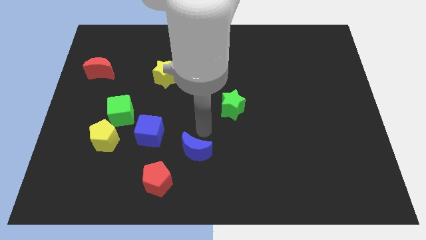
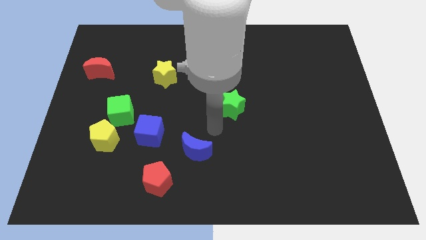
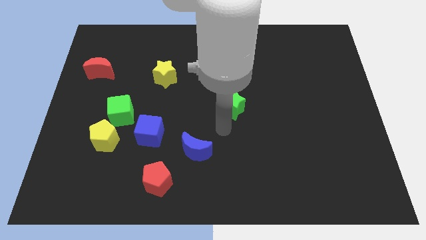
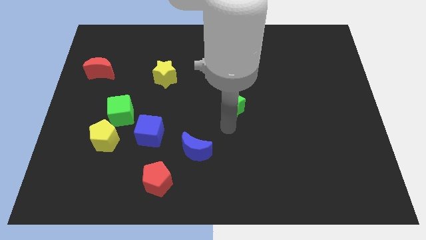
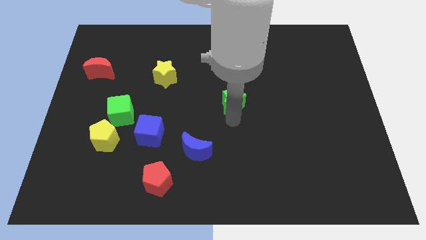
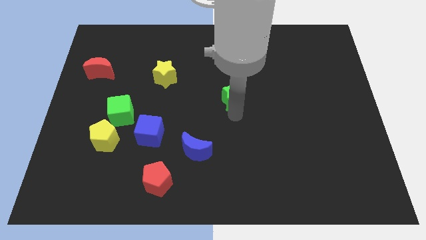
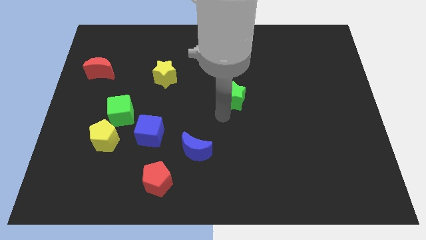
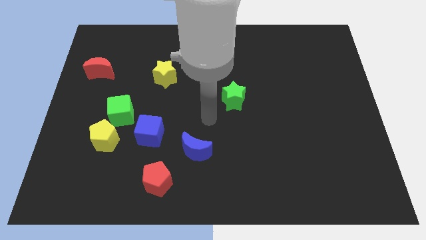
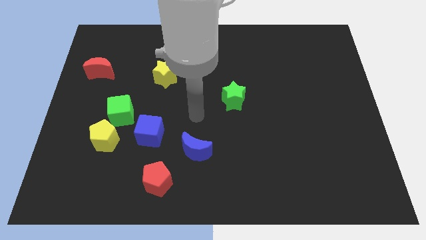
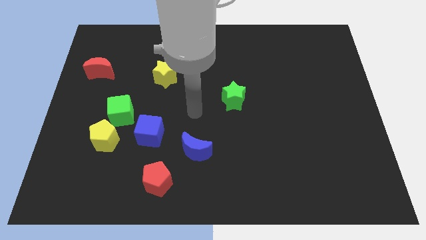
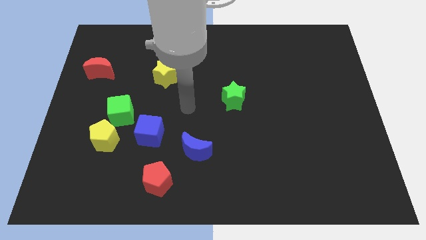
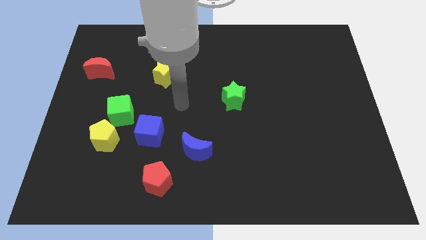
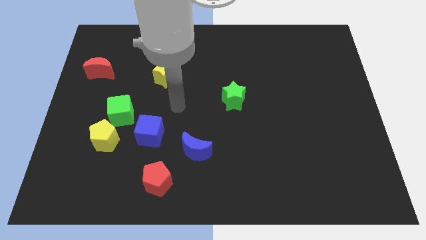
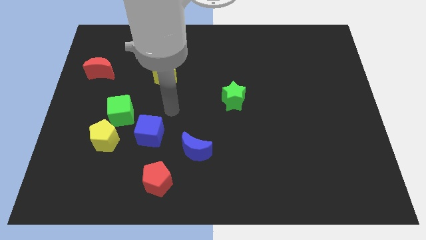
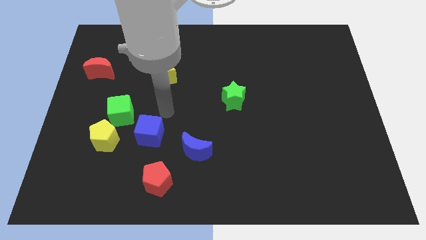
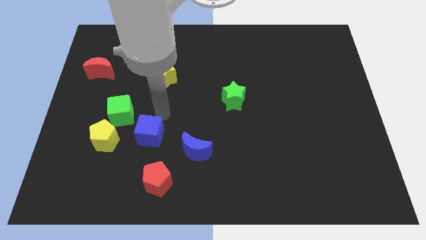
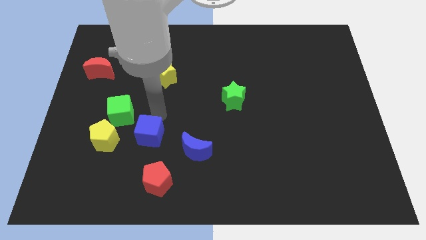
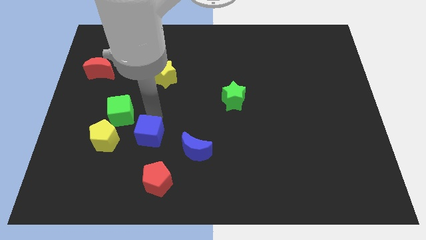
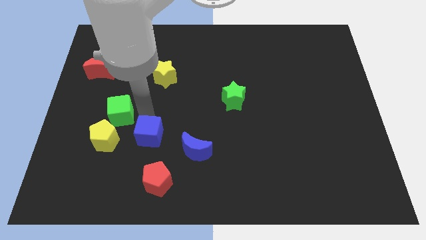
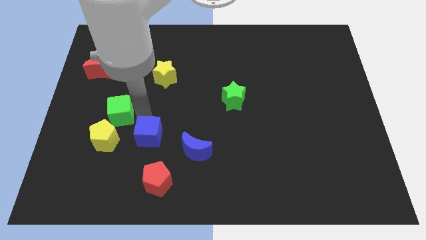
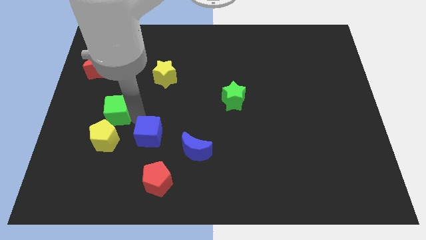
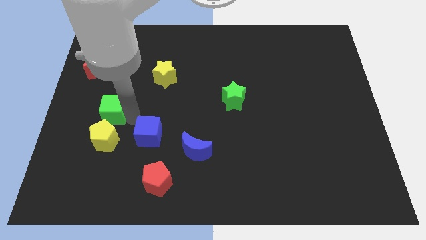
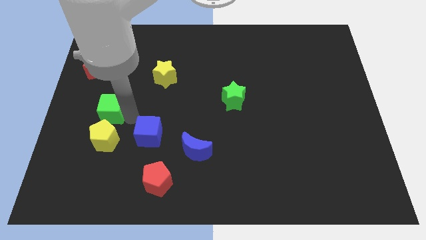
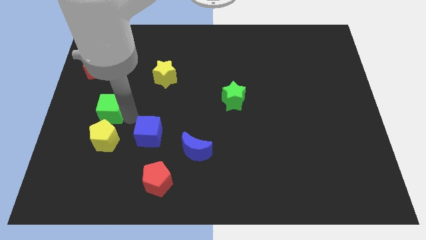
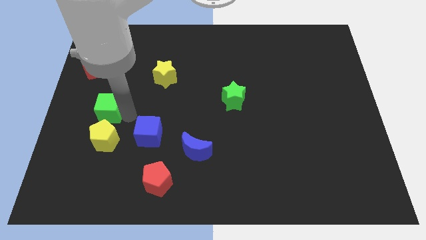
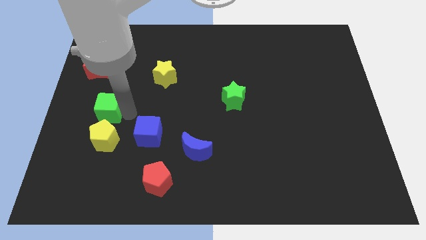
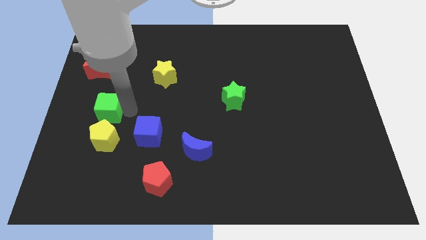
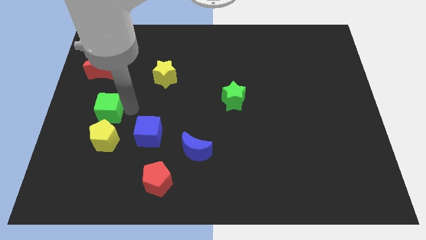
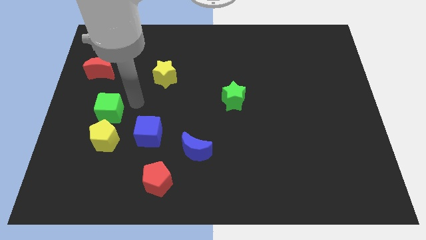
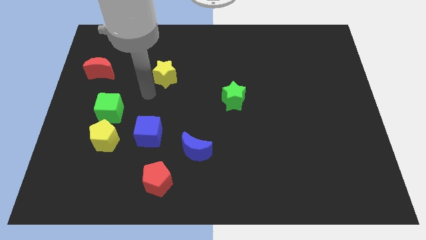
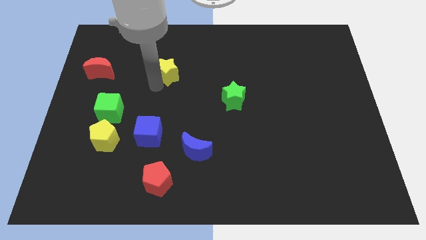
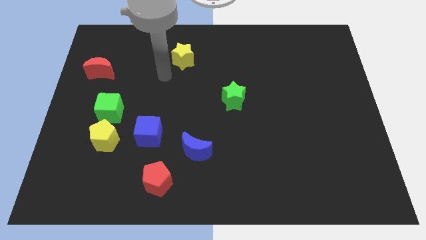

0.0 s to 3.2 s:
separate the green star green cube and yellow star

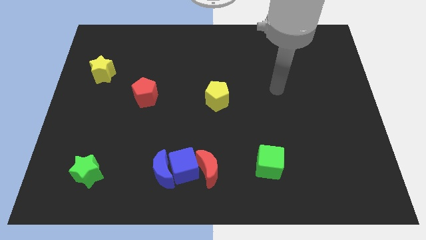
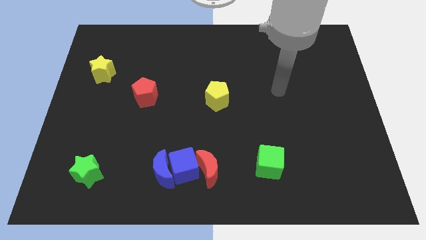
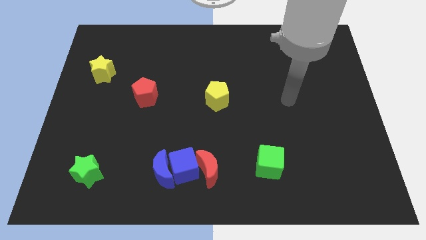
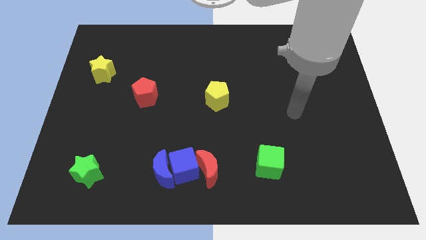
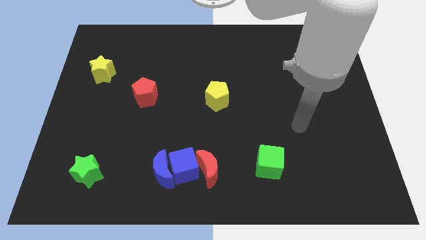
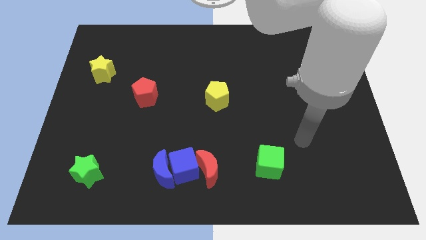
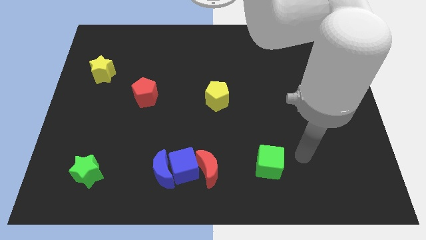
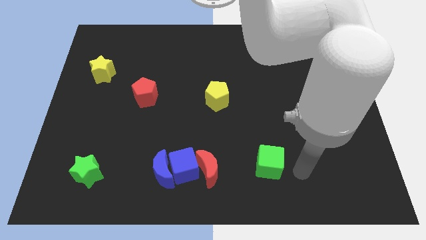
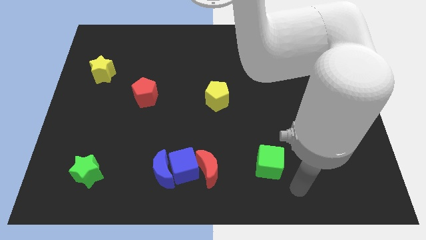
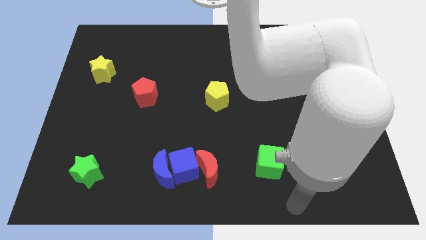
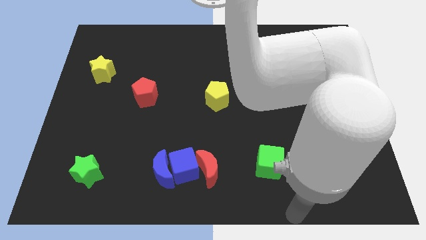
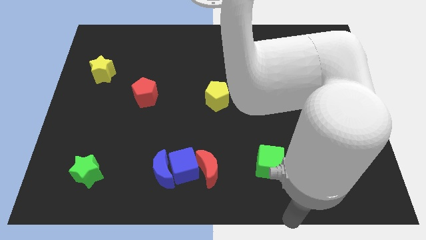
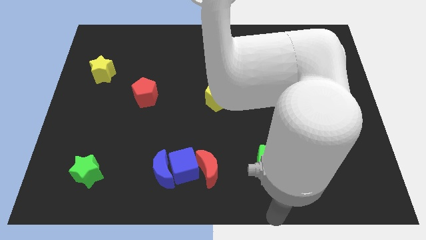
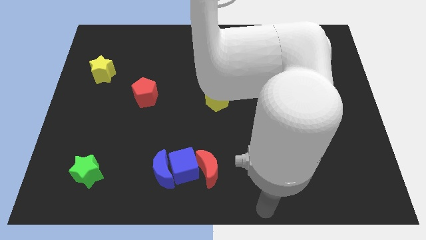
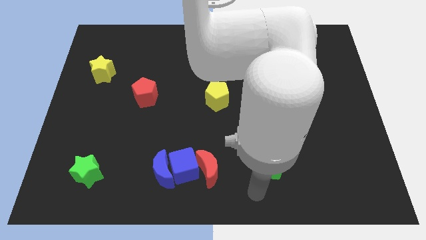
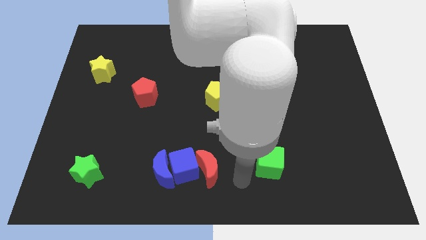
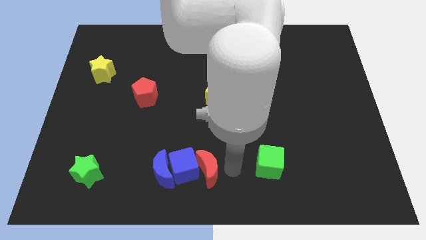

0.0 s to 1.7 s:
place your arm right to the red moon

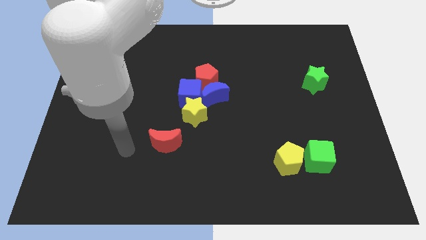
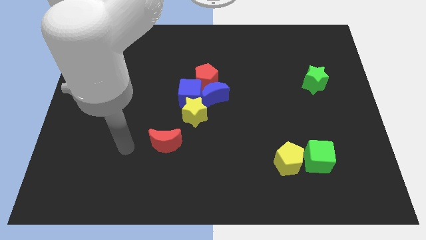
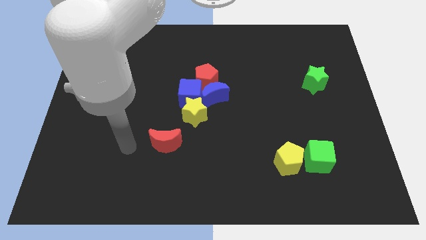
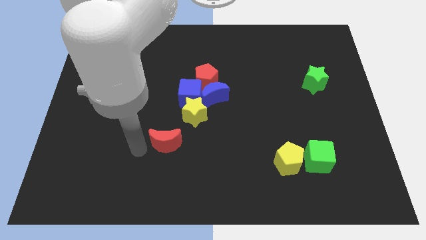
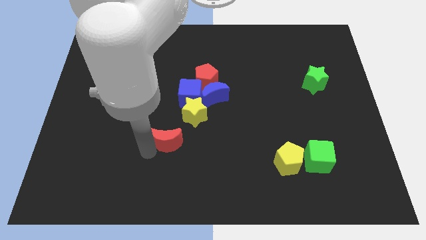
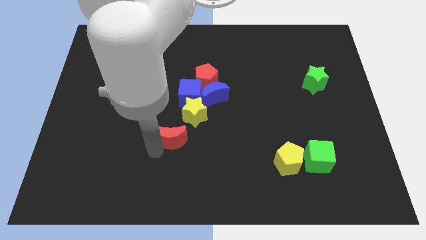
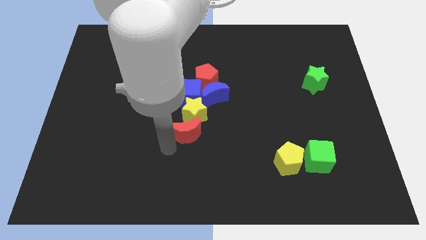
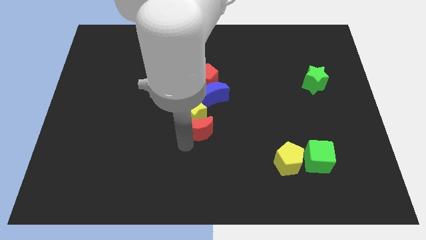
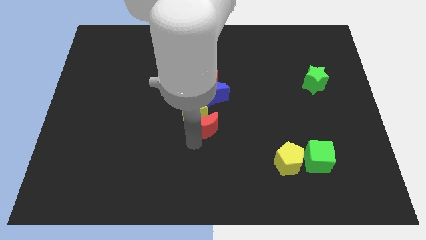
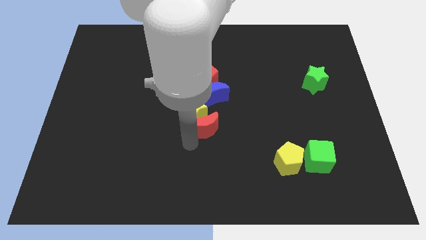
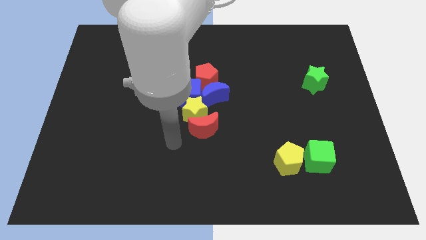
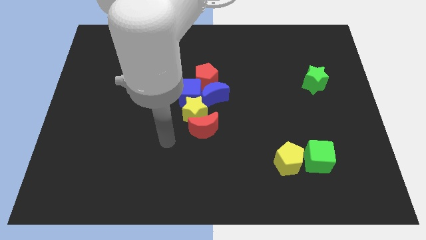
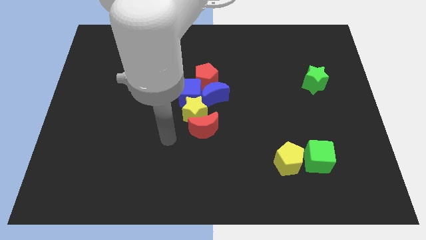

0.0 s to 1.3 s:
put the red crescent below the yellow star

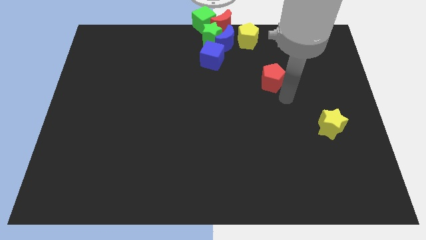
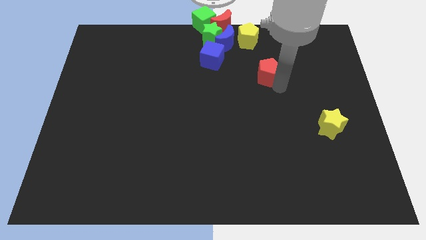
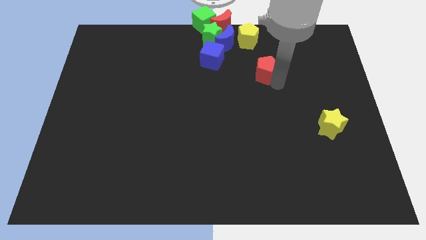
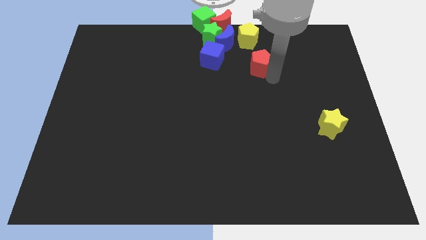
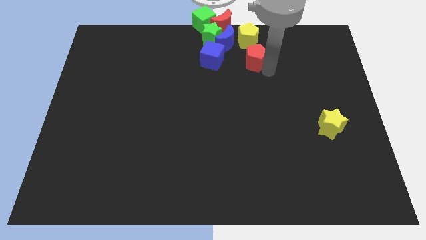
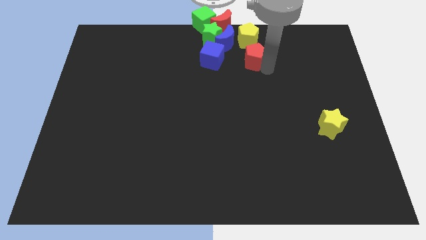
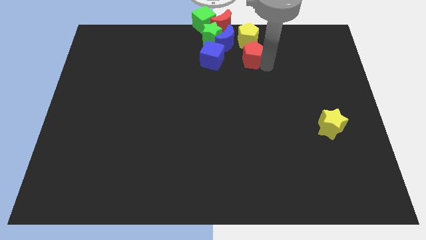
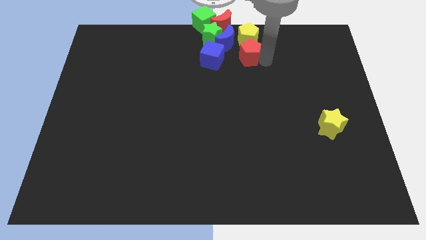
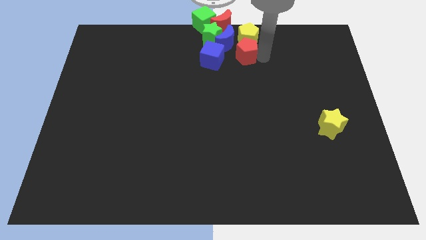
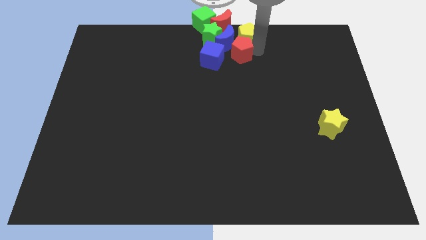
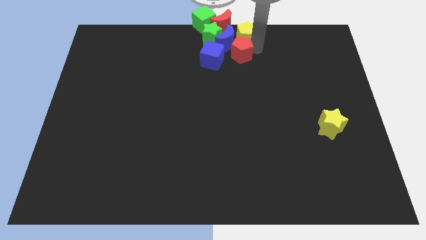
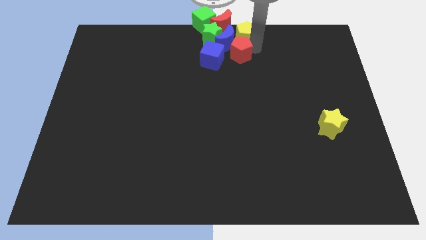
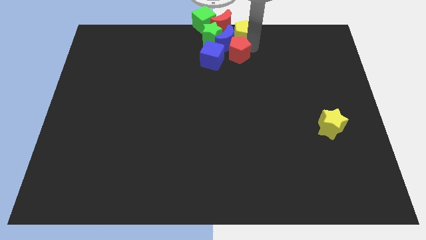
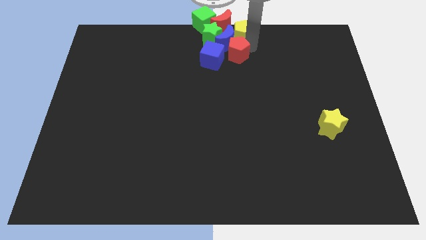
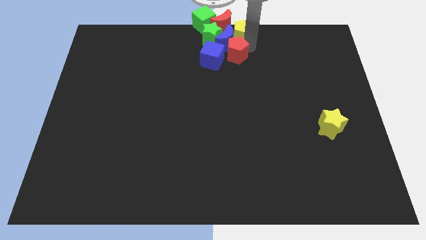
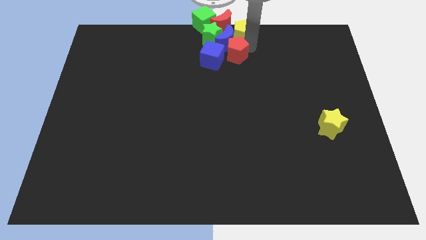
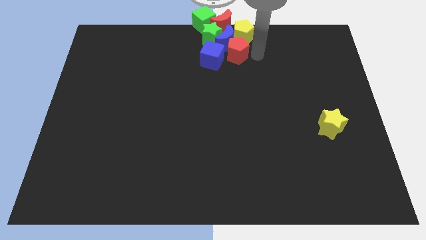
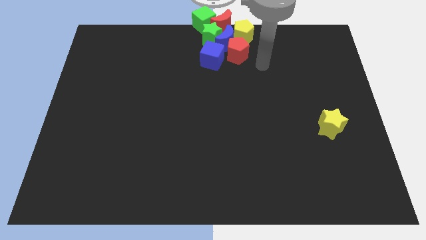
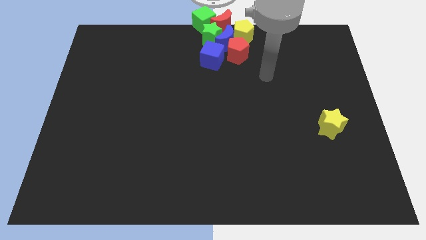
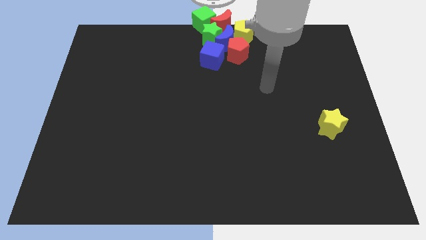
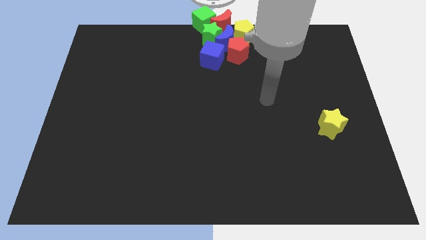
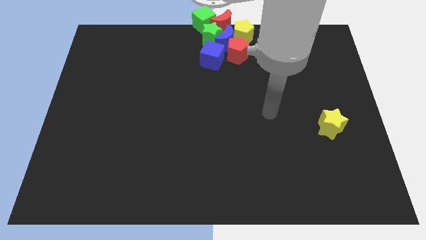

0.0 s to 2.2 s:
put the red pentagon below the yellow pentagon

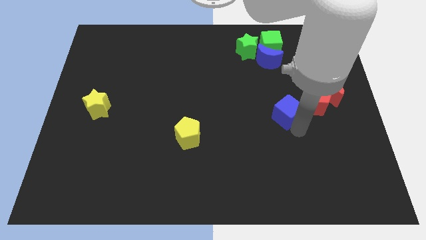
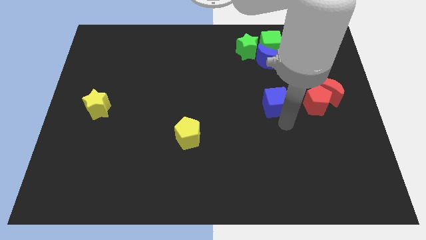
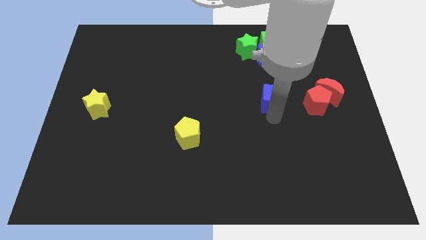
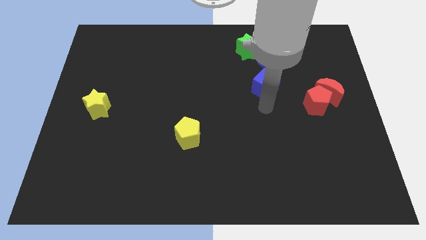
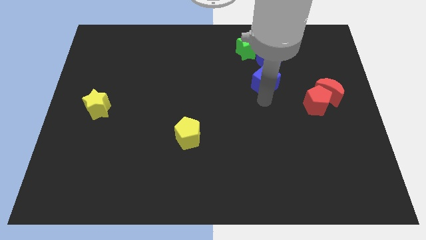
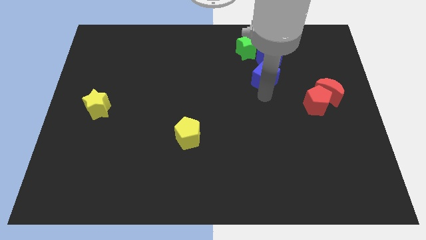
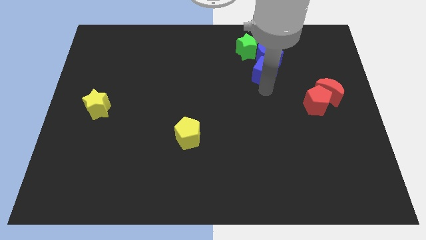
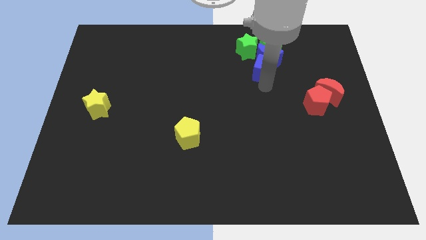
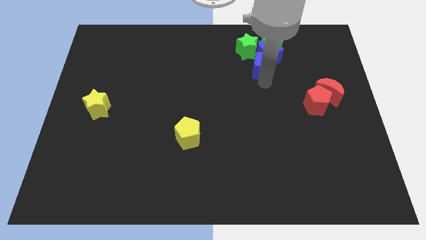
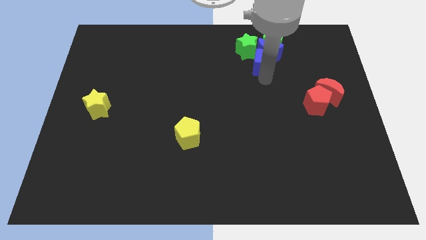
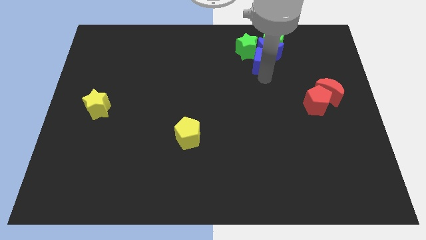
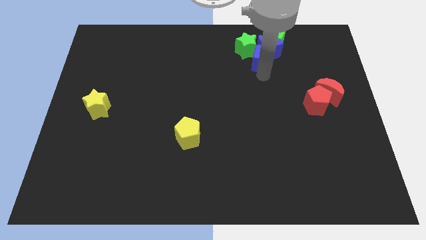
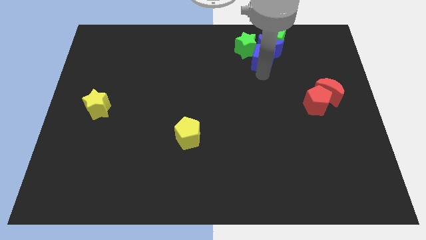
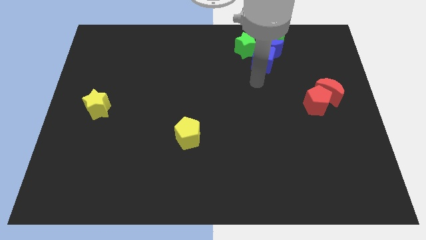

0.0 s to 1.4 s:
push the blue cube into the blue crescent
